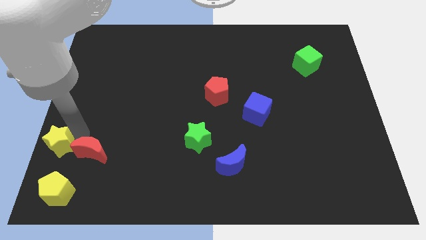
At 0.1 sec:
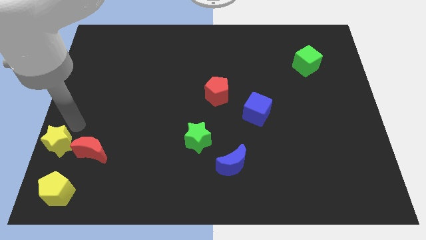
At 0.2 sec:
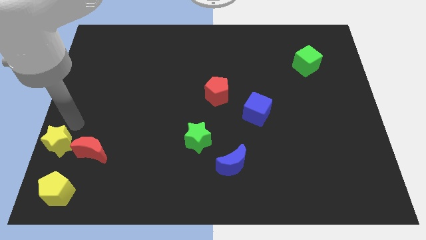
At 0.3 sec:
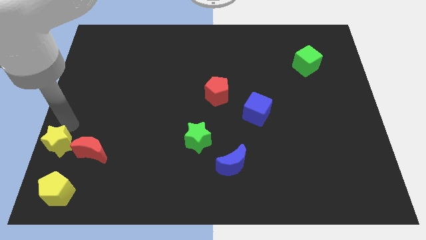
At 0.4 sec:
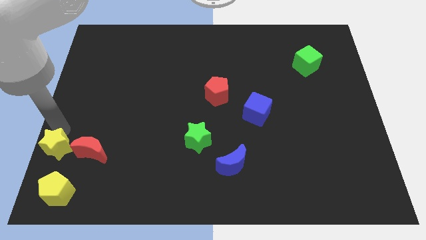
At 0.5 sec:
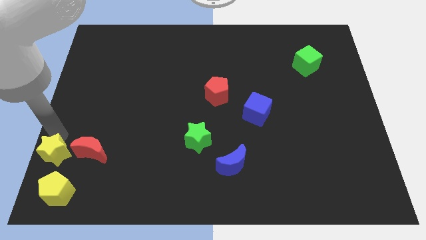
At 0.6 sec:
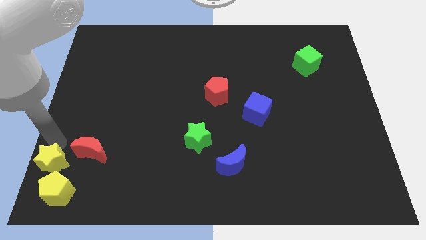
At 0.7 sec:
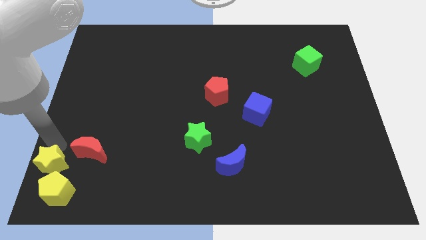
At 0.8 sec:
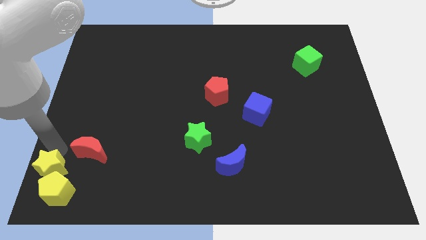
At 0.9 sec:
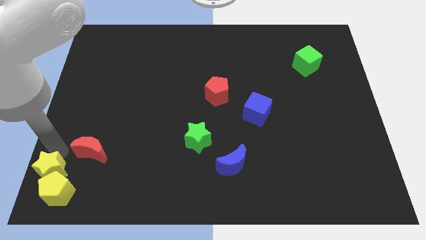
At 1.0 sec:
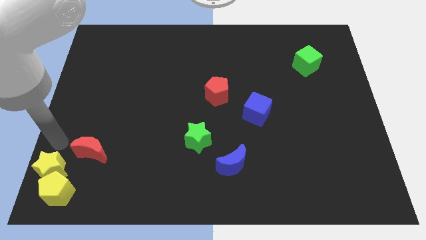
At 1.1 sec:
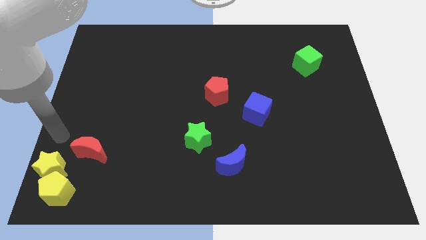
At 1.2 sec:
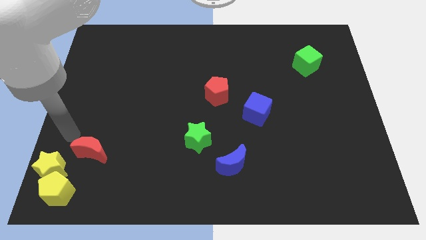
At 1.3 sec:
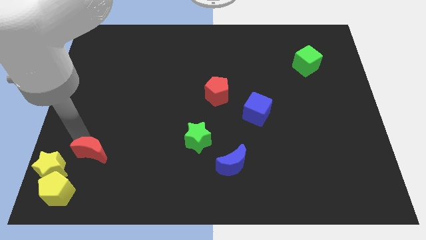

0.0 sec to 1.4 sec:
put the yellow star at the top left side of the yellow pentagon

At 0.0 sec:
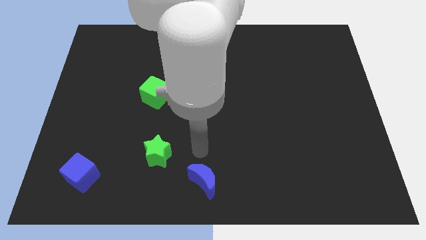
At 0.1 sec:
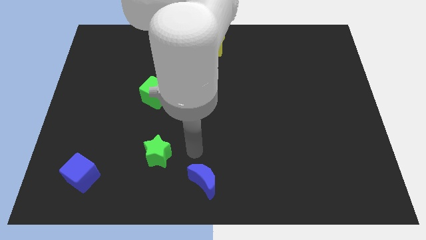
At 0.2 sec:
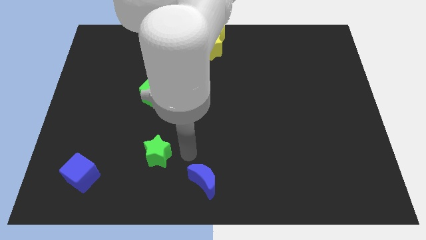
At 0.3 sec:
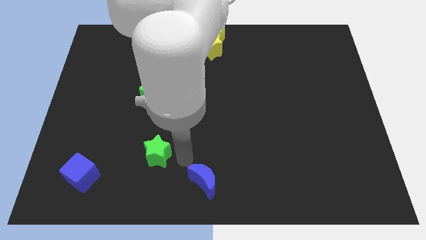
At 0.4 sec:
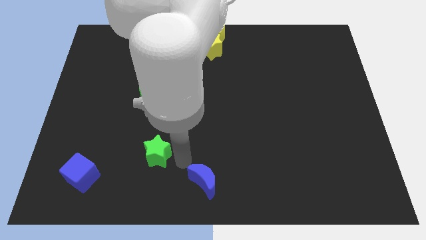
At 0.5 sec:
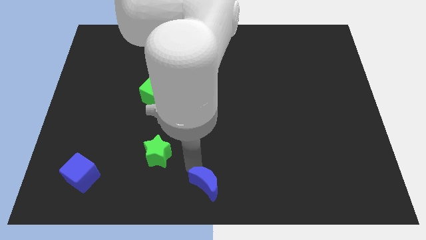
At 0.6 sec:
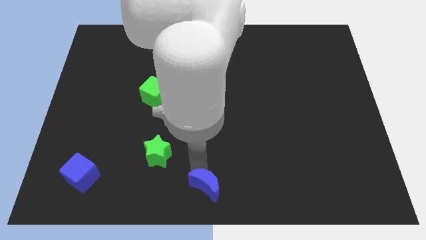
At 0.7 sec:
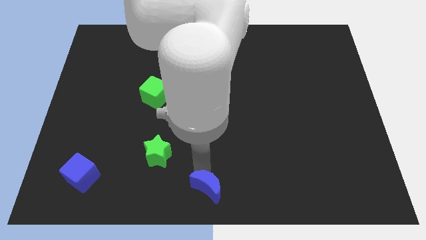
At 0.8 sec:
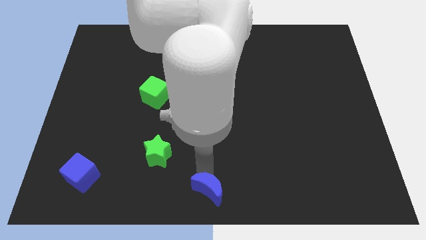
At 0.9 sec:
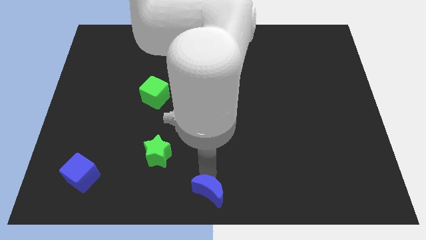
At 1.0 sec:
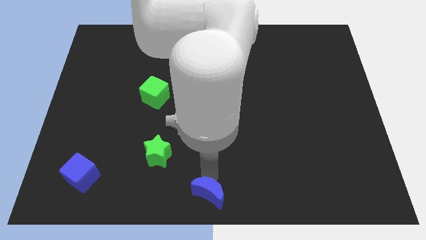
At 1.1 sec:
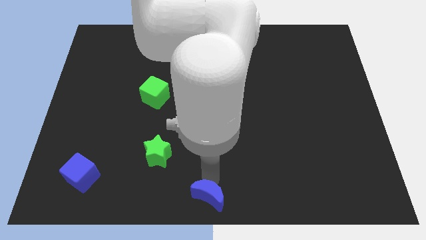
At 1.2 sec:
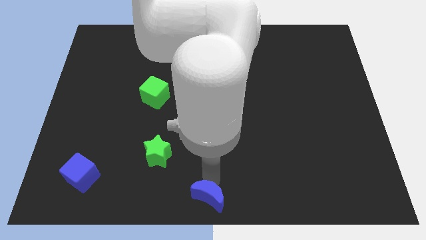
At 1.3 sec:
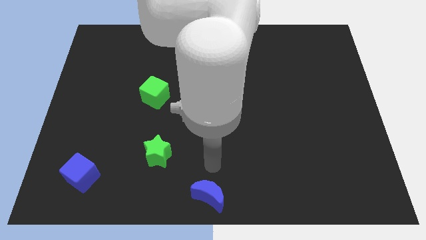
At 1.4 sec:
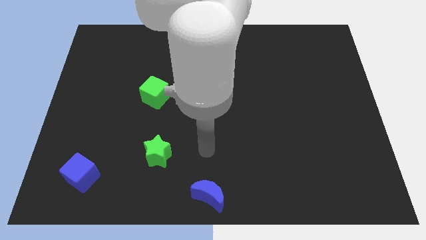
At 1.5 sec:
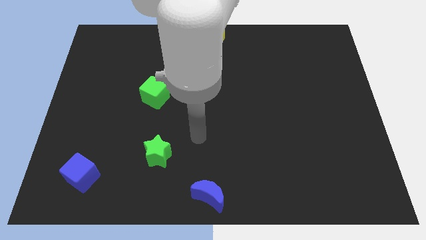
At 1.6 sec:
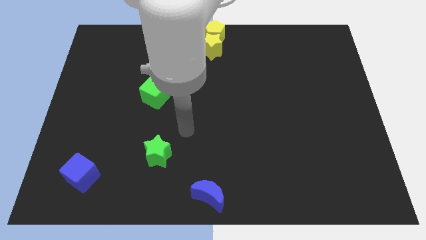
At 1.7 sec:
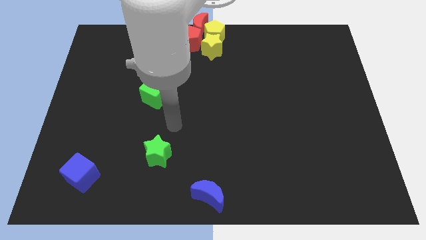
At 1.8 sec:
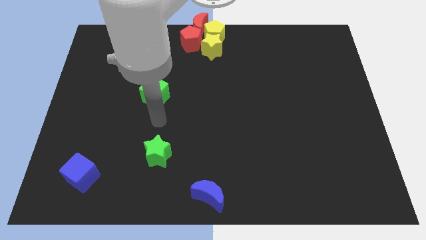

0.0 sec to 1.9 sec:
place blue crescent to the bottom center

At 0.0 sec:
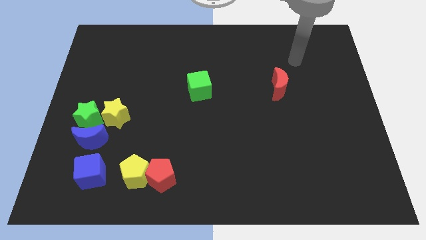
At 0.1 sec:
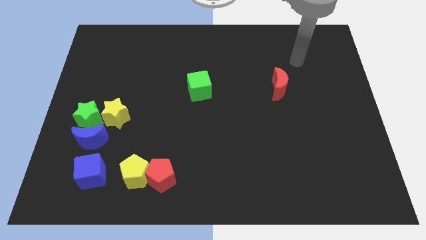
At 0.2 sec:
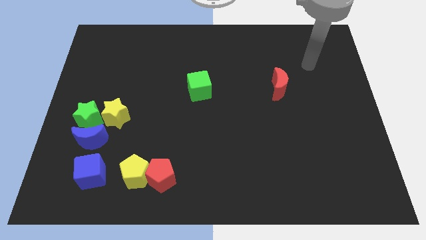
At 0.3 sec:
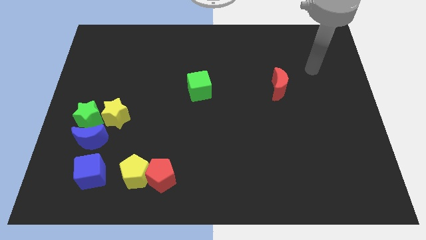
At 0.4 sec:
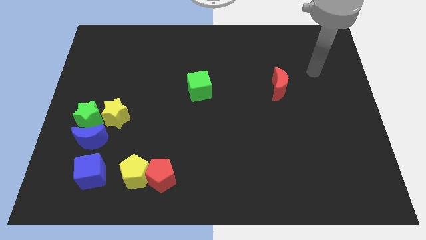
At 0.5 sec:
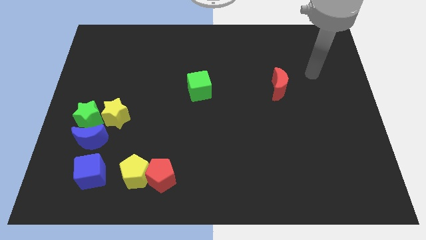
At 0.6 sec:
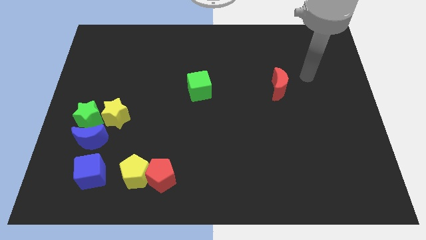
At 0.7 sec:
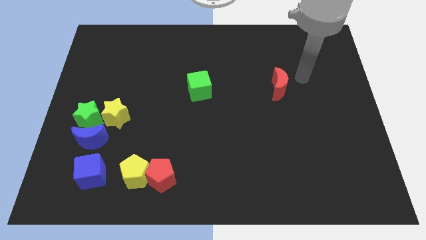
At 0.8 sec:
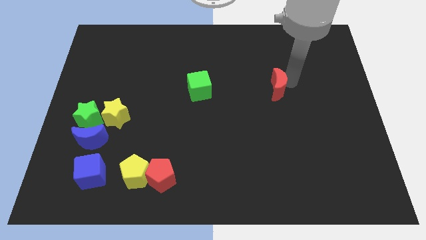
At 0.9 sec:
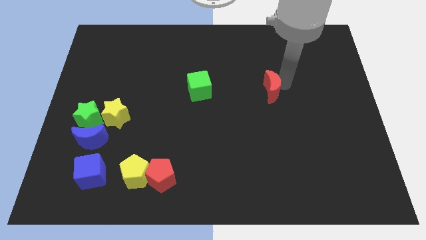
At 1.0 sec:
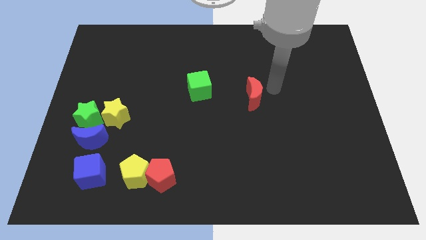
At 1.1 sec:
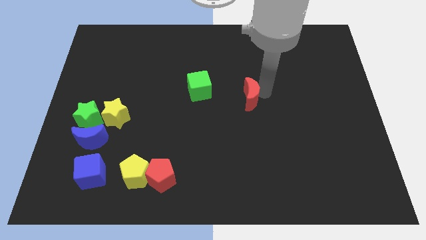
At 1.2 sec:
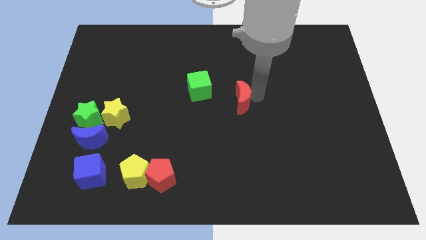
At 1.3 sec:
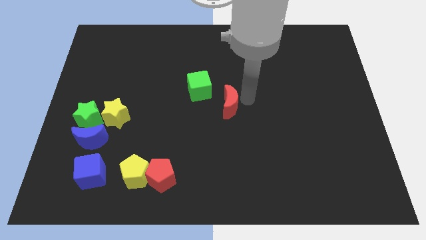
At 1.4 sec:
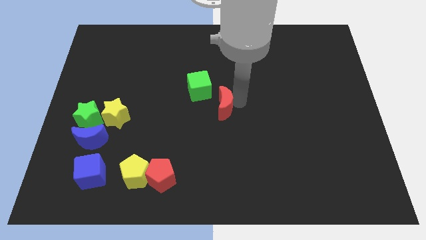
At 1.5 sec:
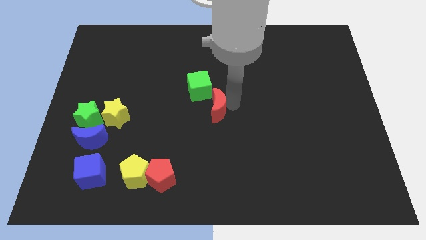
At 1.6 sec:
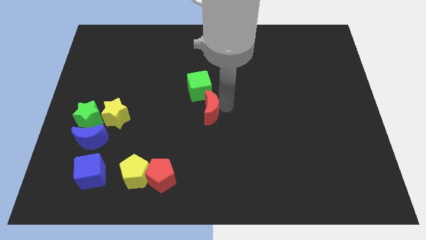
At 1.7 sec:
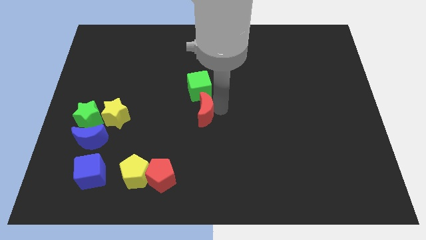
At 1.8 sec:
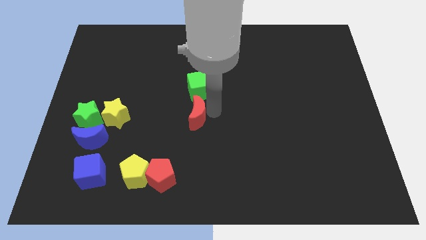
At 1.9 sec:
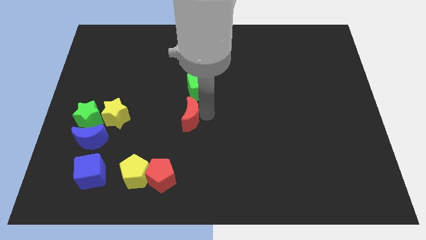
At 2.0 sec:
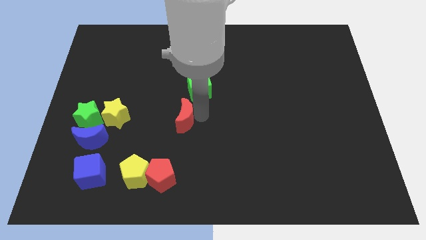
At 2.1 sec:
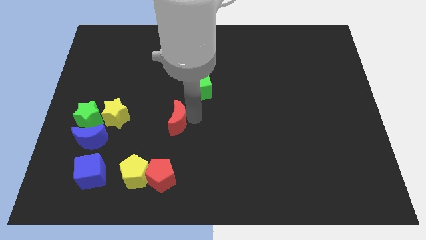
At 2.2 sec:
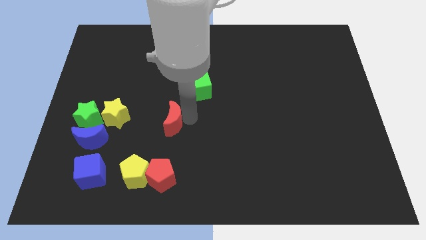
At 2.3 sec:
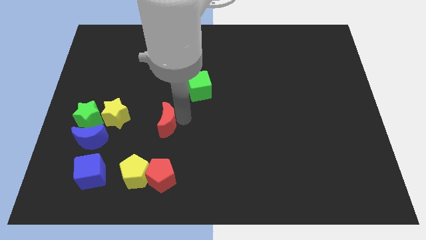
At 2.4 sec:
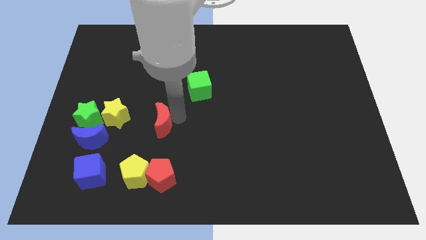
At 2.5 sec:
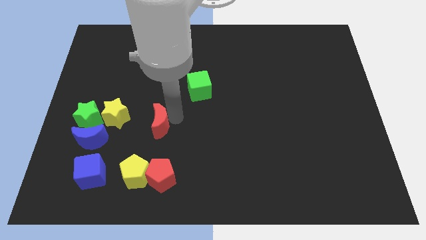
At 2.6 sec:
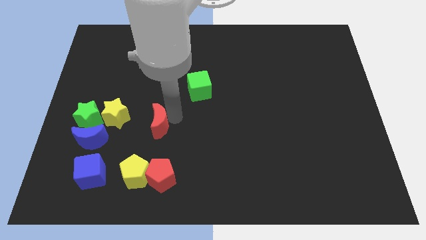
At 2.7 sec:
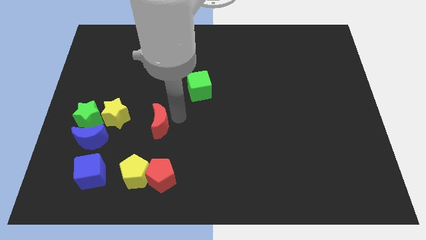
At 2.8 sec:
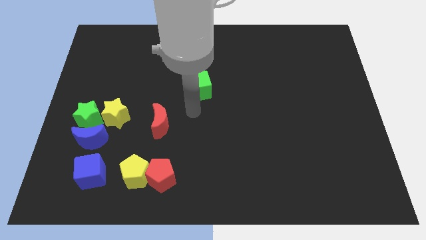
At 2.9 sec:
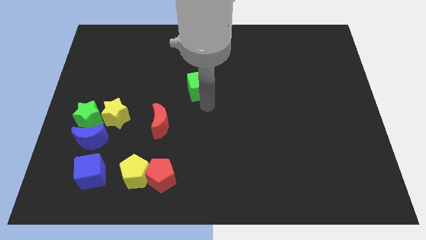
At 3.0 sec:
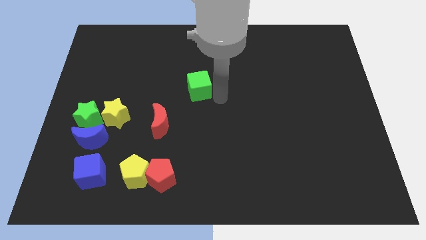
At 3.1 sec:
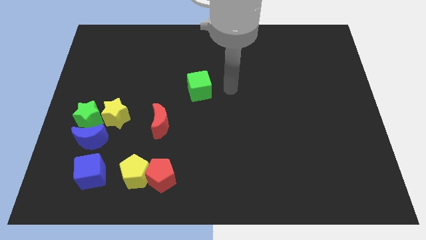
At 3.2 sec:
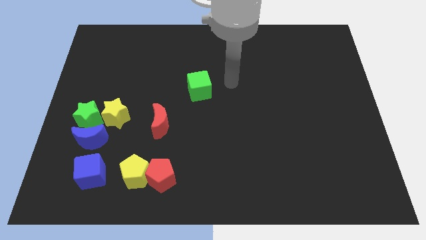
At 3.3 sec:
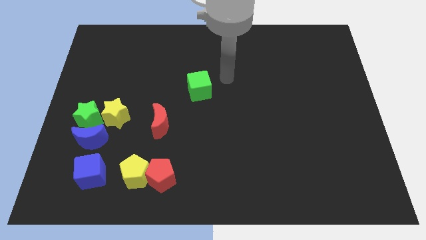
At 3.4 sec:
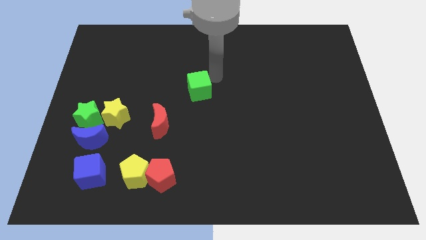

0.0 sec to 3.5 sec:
push the red moon to the right side of the yellow star

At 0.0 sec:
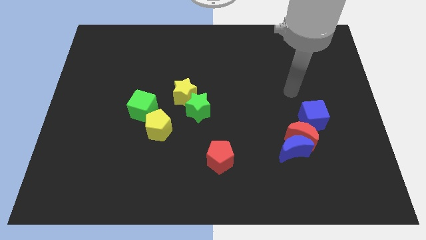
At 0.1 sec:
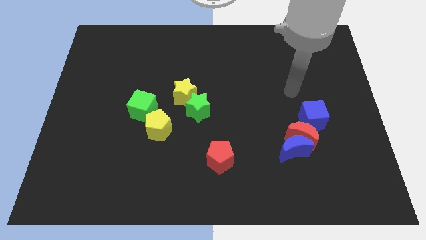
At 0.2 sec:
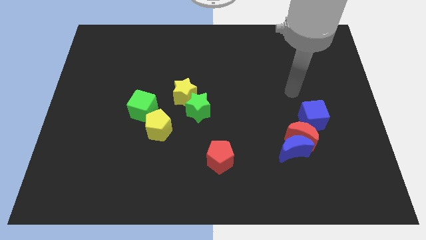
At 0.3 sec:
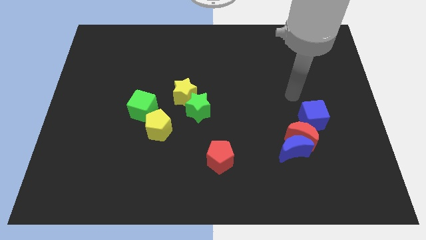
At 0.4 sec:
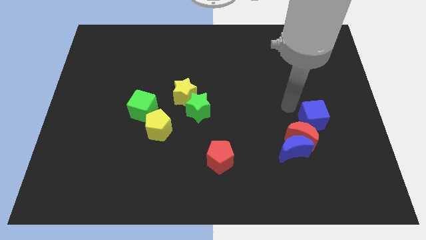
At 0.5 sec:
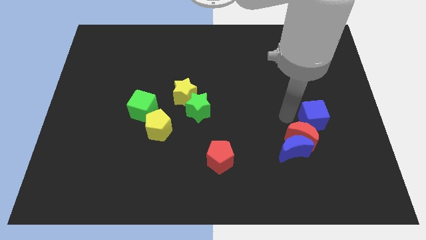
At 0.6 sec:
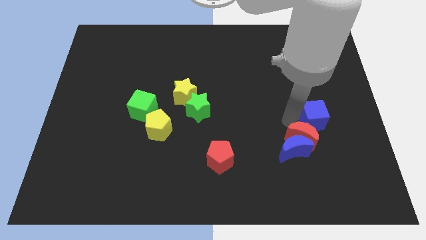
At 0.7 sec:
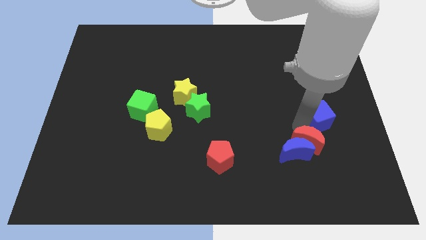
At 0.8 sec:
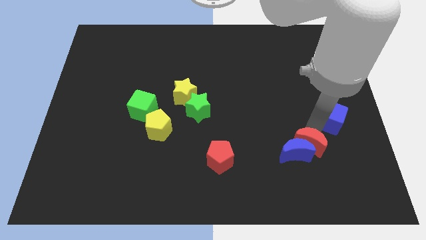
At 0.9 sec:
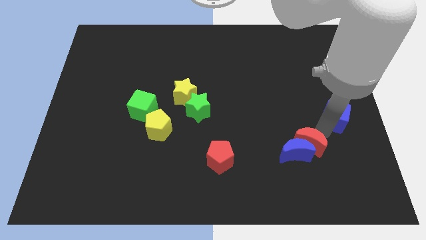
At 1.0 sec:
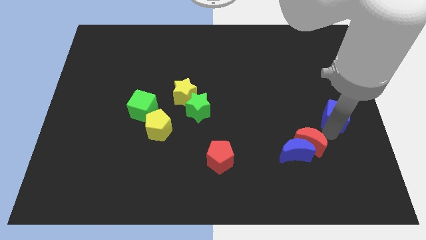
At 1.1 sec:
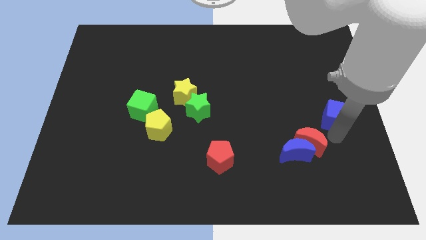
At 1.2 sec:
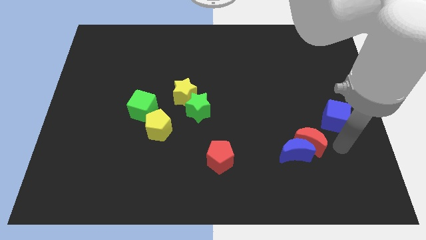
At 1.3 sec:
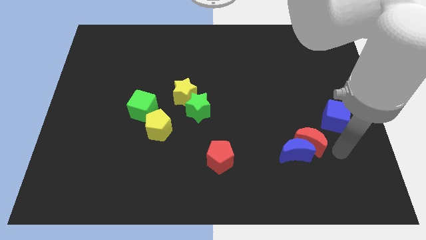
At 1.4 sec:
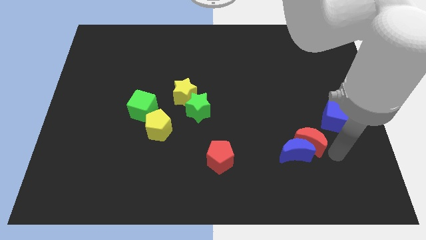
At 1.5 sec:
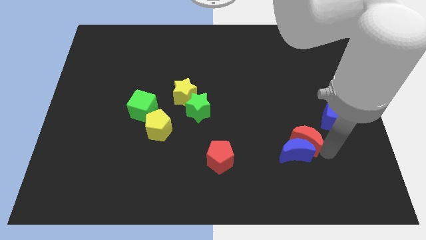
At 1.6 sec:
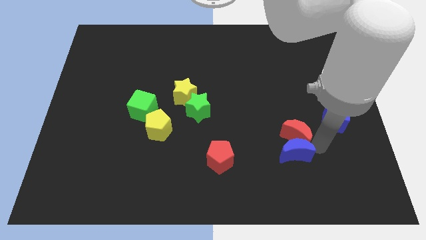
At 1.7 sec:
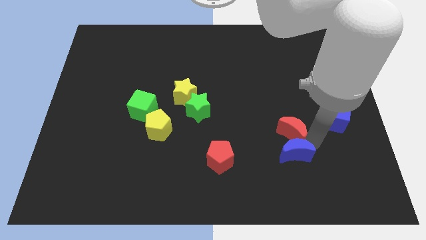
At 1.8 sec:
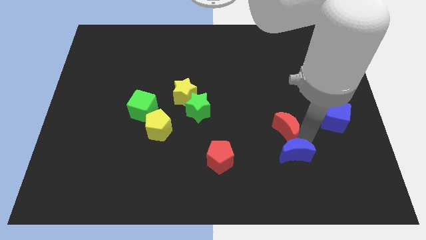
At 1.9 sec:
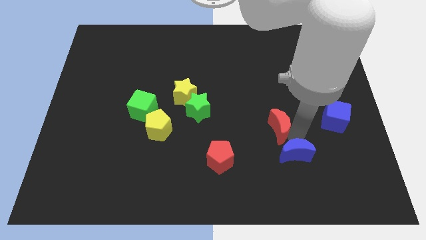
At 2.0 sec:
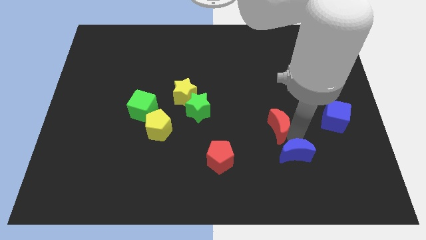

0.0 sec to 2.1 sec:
slide the blue cube diagonally to the blue moon
